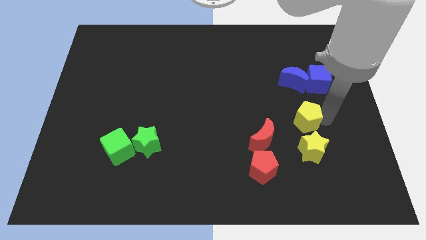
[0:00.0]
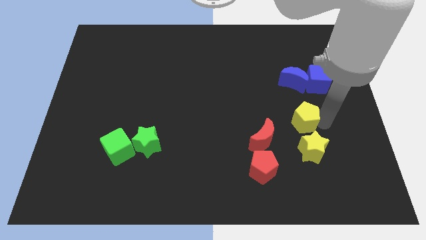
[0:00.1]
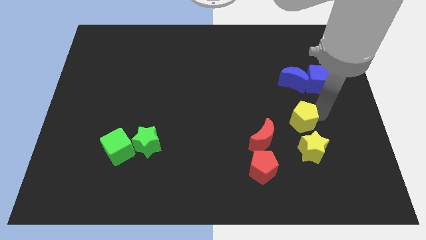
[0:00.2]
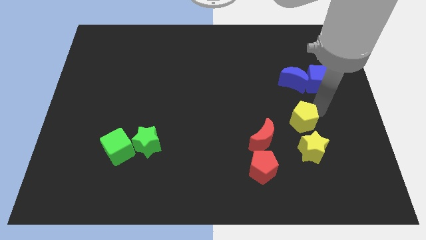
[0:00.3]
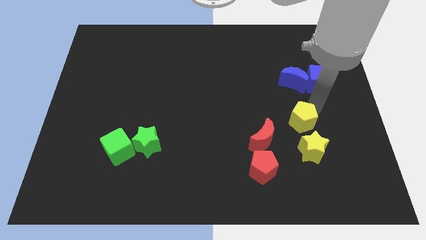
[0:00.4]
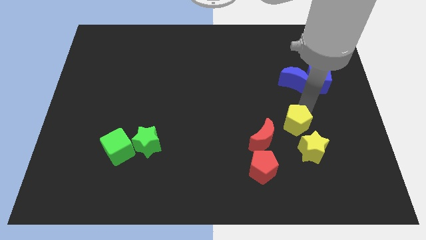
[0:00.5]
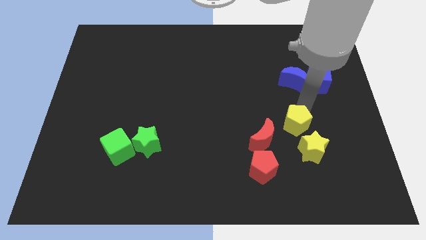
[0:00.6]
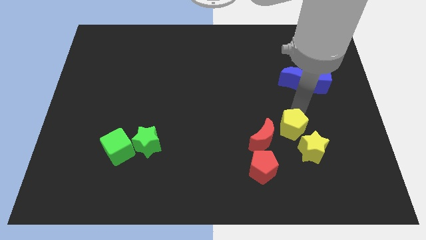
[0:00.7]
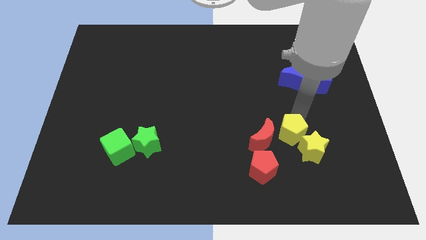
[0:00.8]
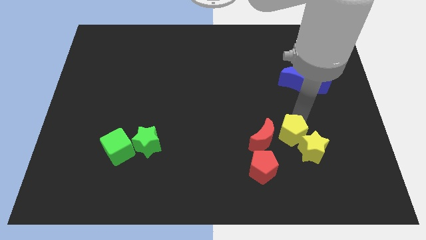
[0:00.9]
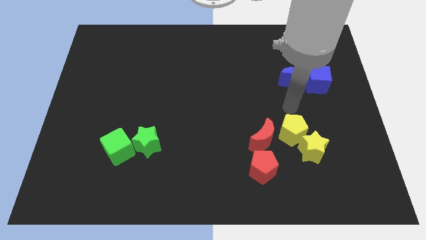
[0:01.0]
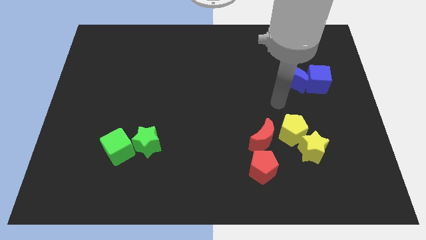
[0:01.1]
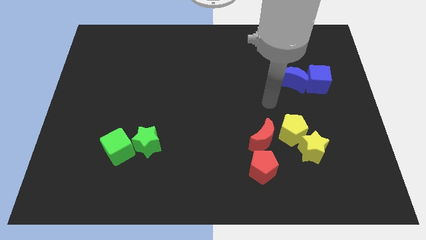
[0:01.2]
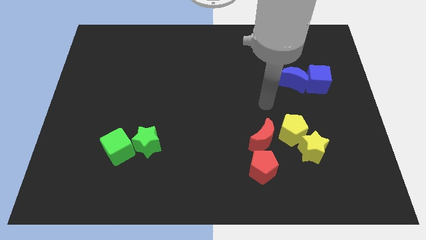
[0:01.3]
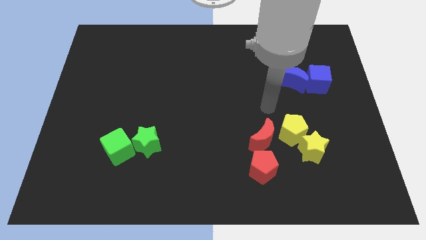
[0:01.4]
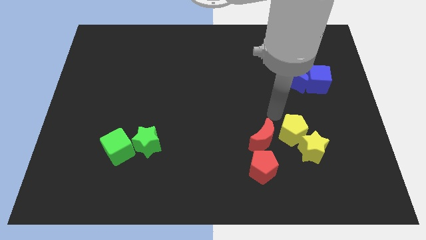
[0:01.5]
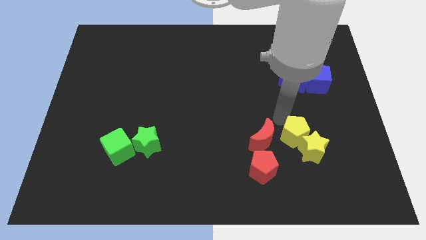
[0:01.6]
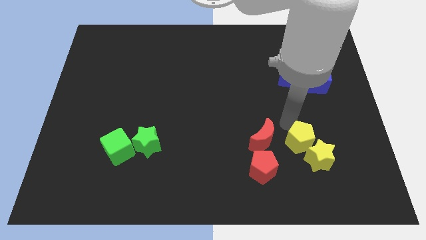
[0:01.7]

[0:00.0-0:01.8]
push the yellow pentagon into yellow star

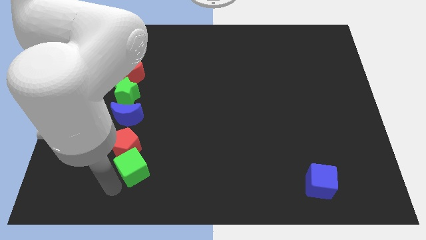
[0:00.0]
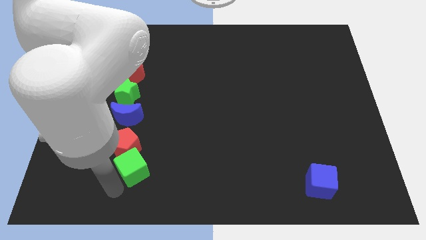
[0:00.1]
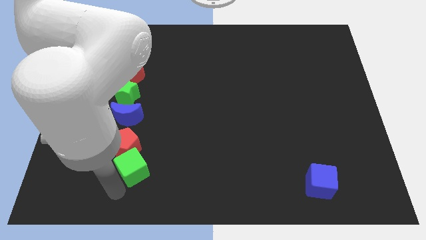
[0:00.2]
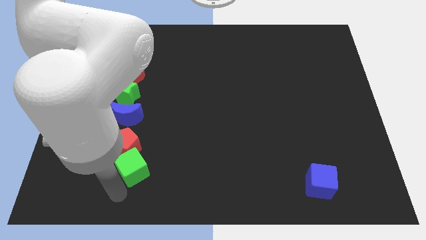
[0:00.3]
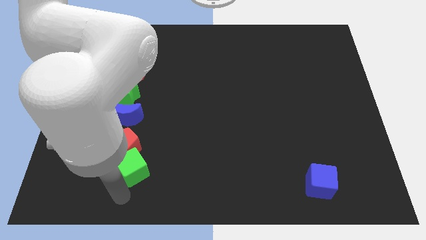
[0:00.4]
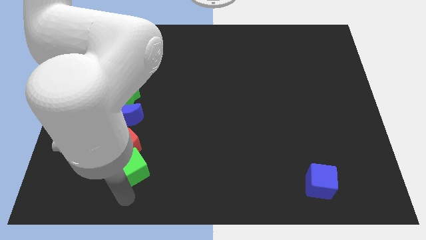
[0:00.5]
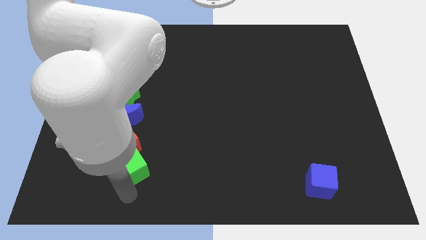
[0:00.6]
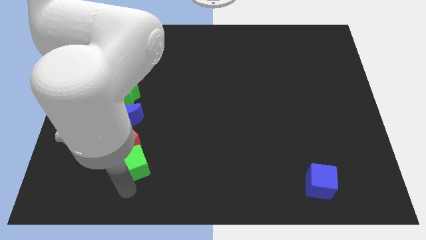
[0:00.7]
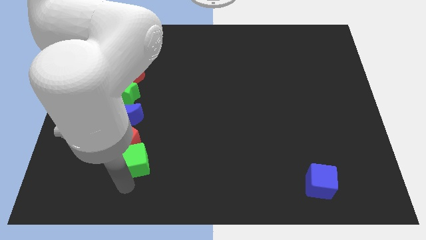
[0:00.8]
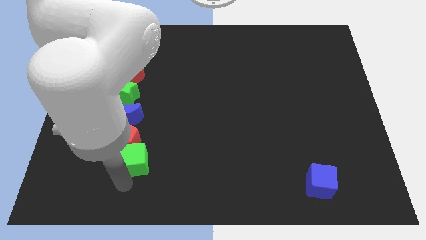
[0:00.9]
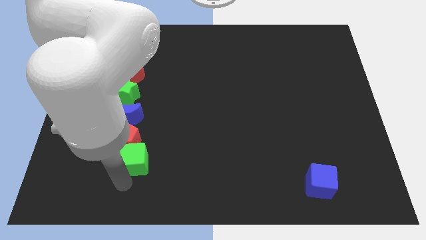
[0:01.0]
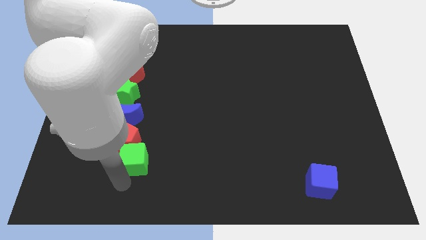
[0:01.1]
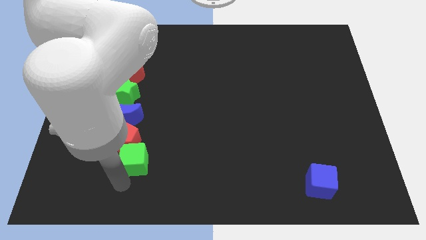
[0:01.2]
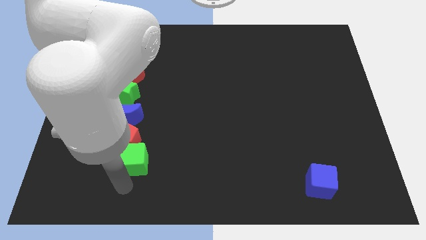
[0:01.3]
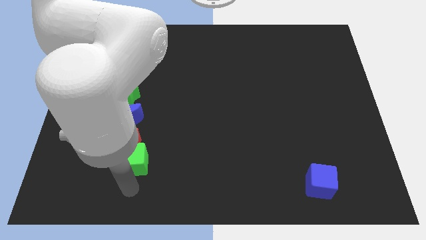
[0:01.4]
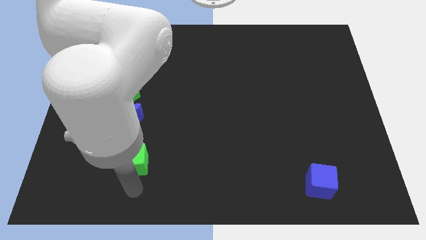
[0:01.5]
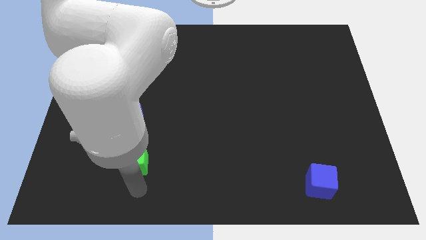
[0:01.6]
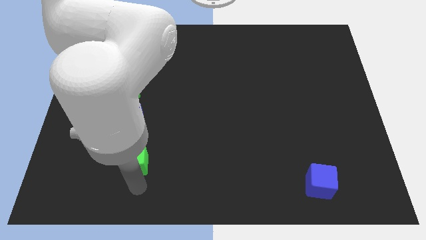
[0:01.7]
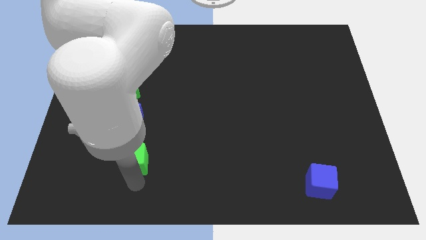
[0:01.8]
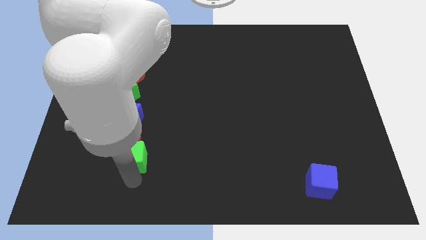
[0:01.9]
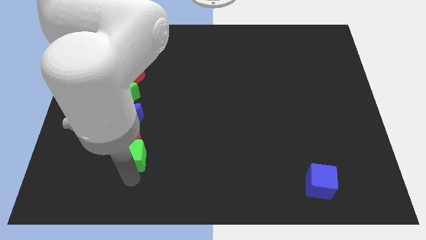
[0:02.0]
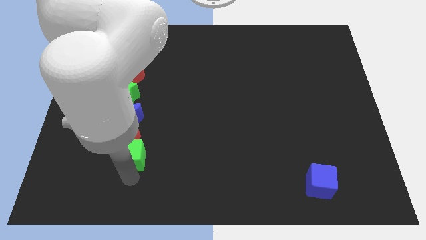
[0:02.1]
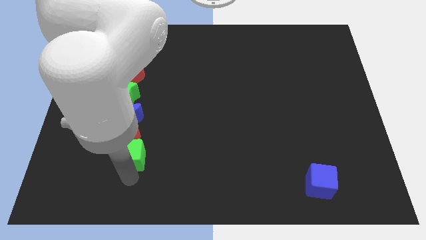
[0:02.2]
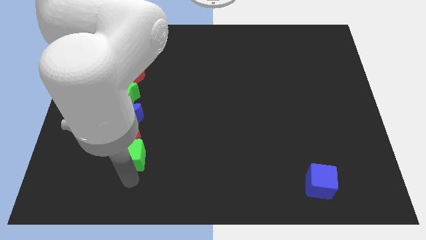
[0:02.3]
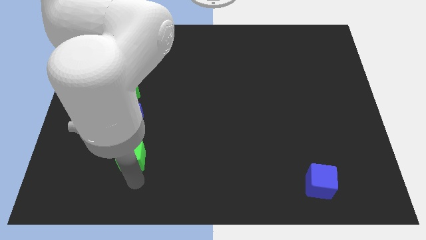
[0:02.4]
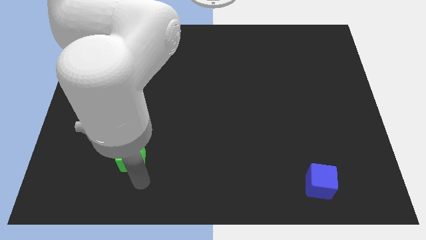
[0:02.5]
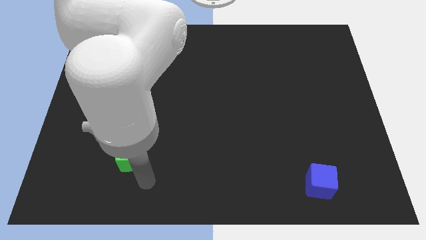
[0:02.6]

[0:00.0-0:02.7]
move both green cube and red pentagon to the bottom side of the blue moon

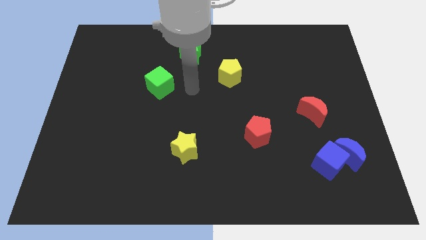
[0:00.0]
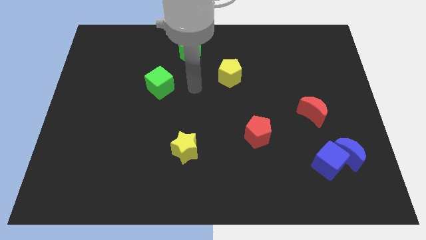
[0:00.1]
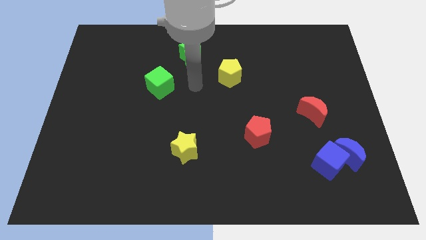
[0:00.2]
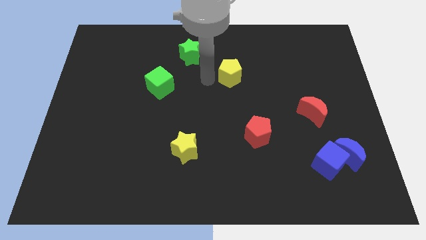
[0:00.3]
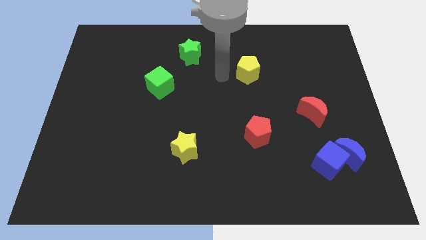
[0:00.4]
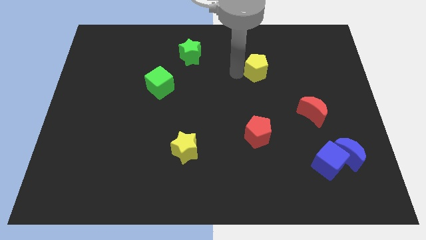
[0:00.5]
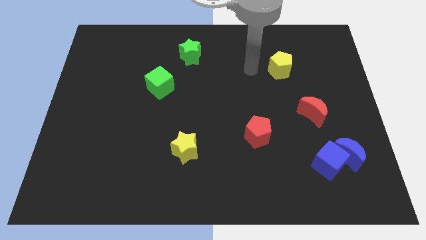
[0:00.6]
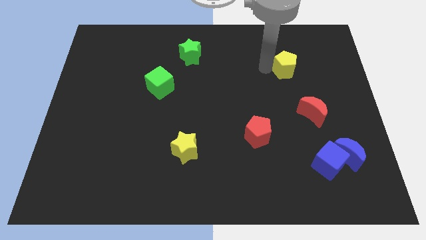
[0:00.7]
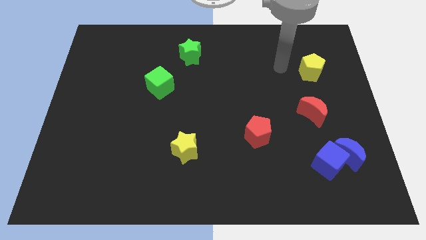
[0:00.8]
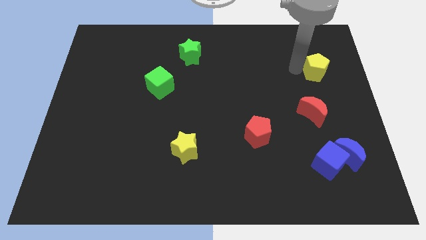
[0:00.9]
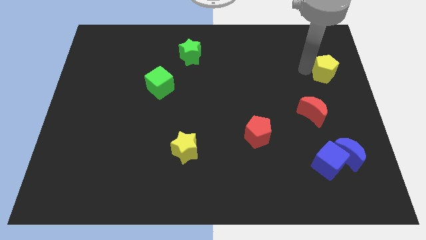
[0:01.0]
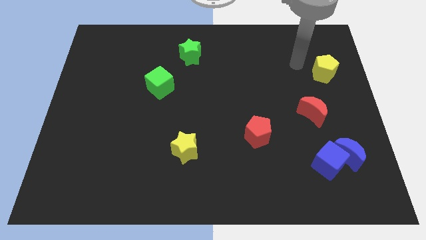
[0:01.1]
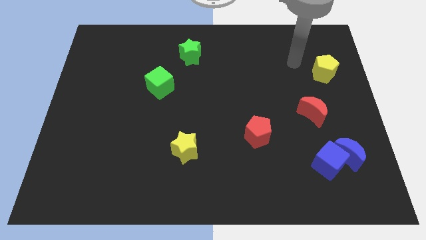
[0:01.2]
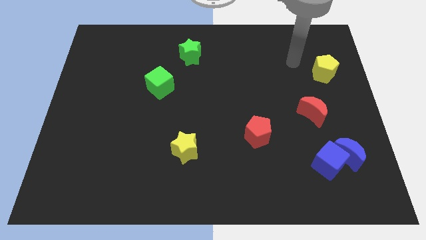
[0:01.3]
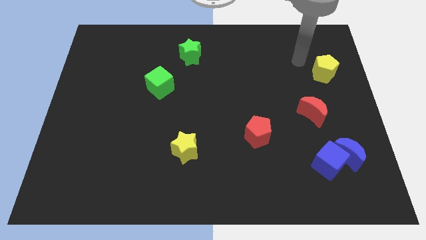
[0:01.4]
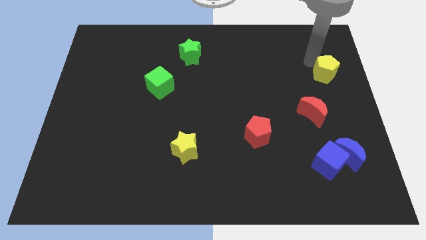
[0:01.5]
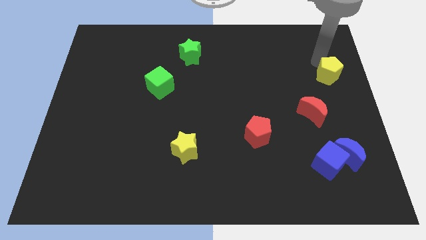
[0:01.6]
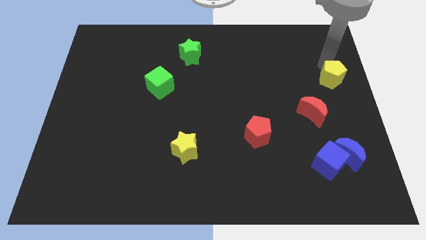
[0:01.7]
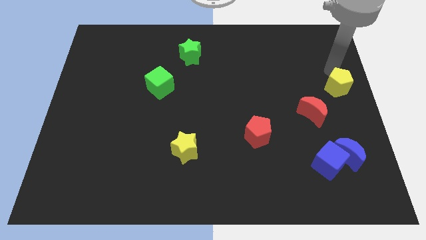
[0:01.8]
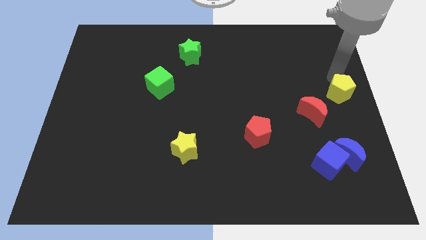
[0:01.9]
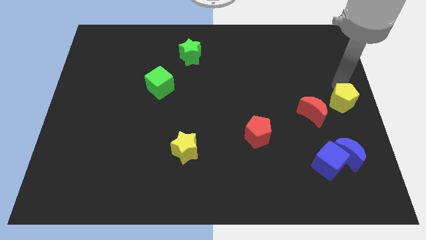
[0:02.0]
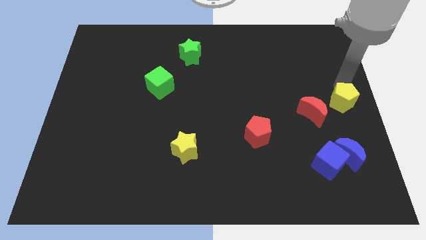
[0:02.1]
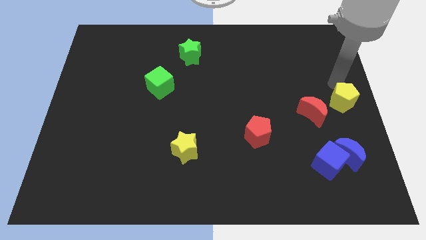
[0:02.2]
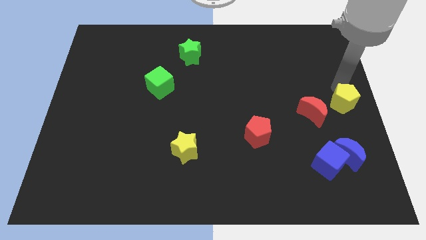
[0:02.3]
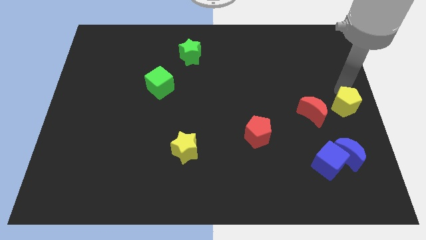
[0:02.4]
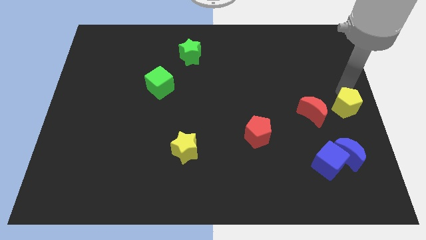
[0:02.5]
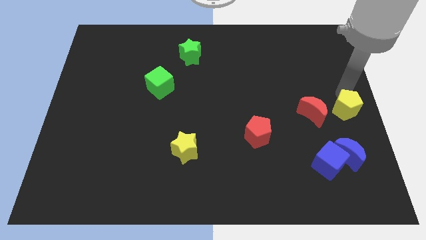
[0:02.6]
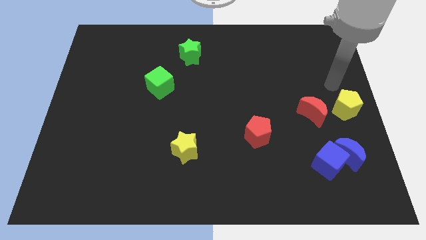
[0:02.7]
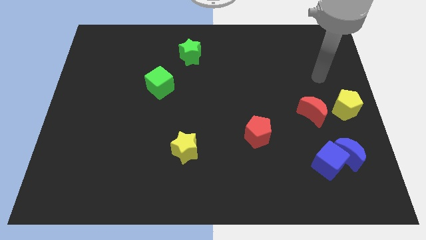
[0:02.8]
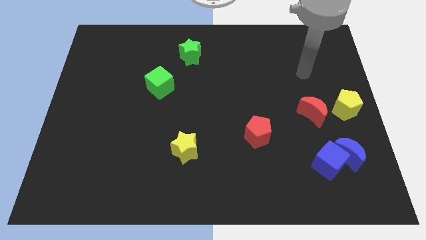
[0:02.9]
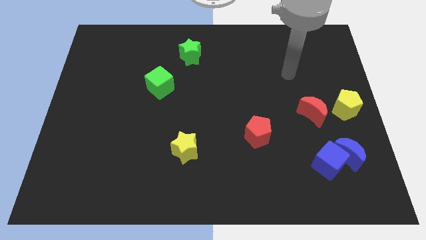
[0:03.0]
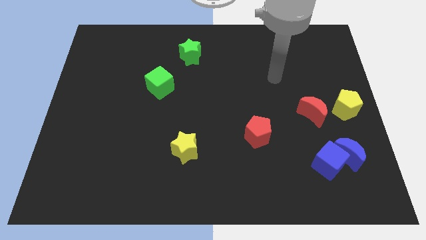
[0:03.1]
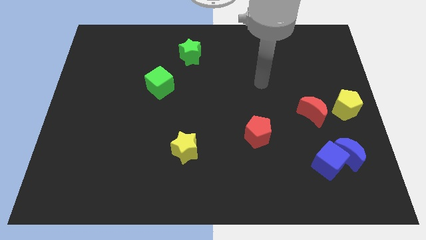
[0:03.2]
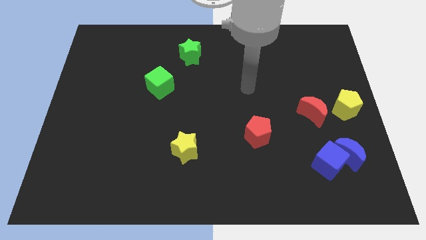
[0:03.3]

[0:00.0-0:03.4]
move the yellow pentagon to the right of the red crescent

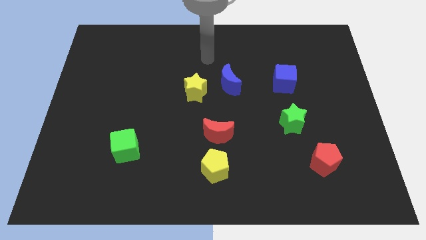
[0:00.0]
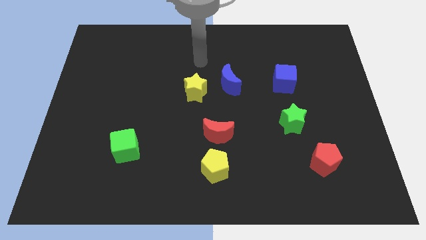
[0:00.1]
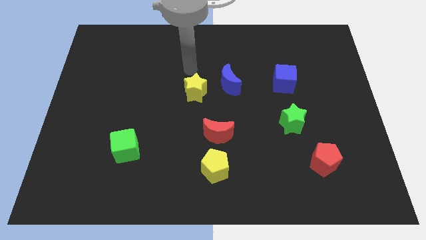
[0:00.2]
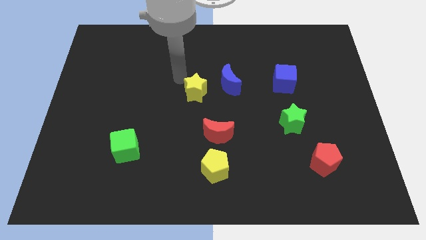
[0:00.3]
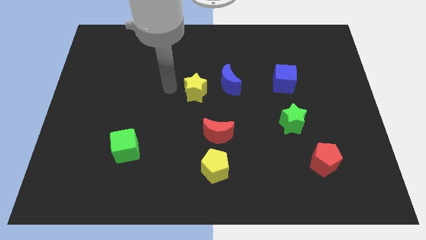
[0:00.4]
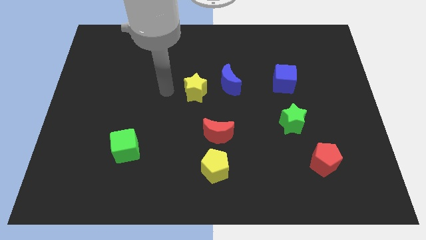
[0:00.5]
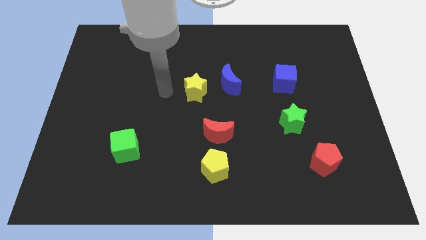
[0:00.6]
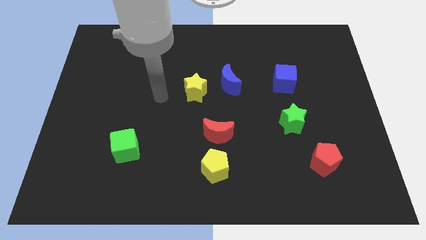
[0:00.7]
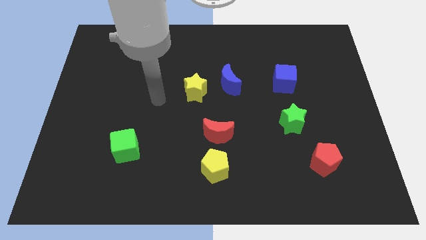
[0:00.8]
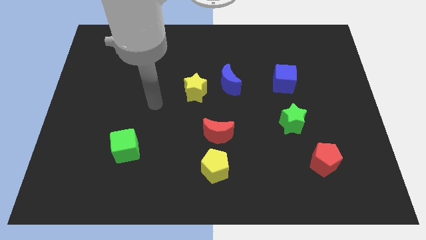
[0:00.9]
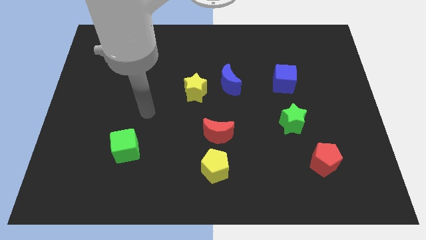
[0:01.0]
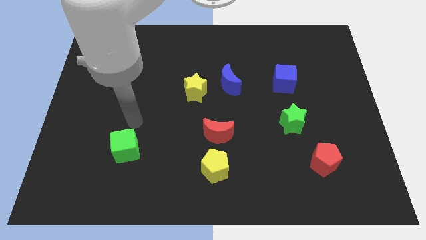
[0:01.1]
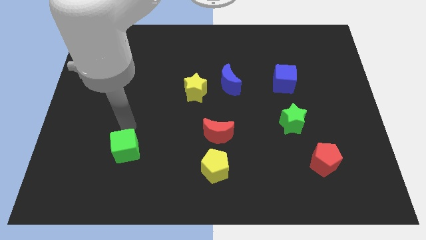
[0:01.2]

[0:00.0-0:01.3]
point your arm at the top of the green cube
